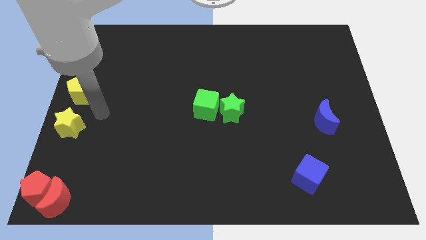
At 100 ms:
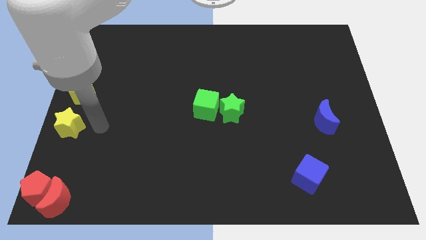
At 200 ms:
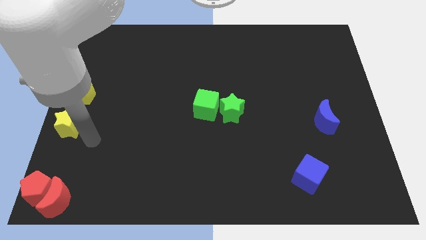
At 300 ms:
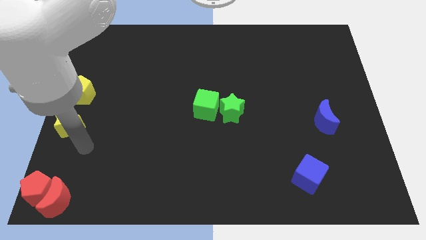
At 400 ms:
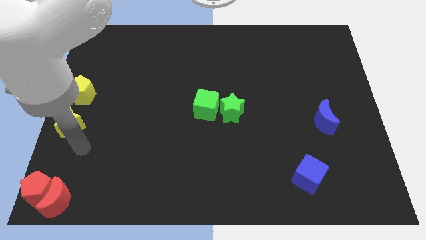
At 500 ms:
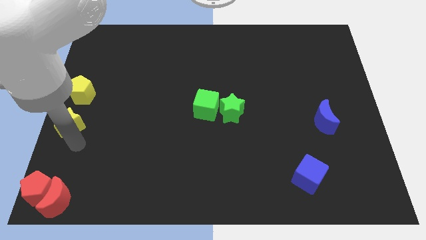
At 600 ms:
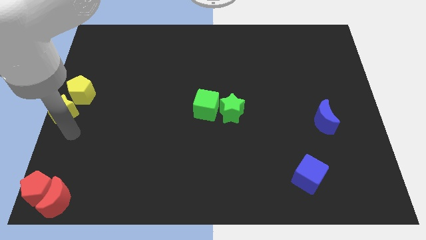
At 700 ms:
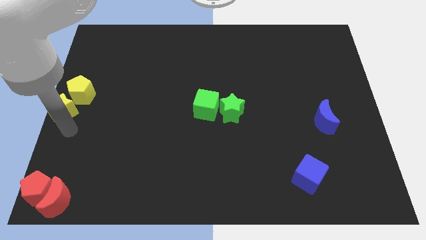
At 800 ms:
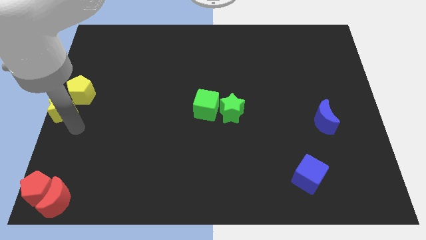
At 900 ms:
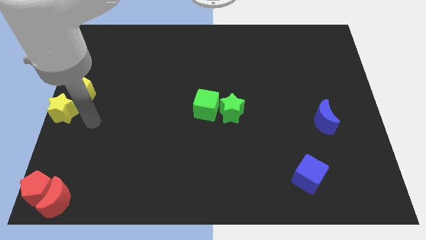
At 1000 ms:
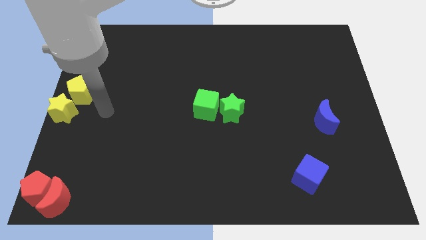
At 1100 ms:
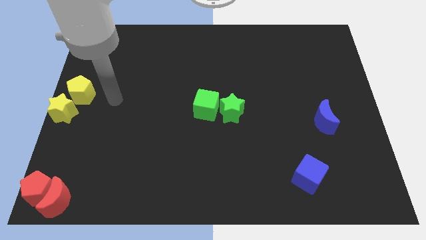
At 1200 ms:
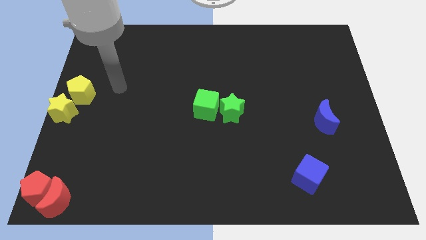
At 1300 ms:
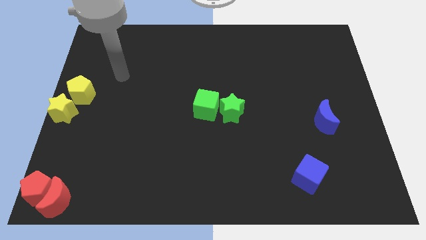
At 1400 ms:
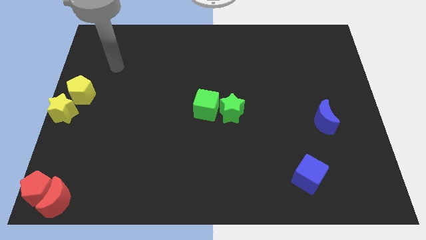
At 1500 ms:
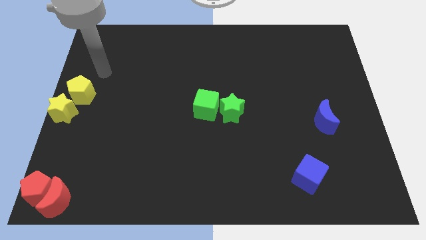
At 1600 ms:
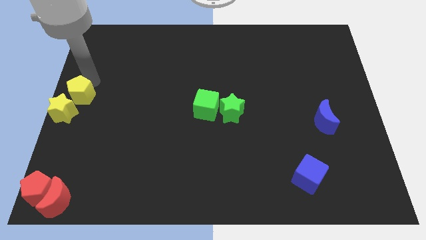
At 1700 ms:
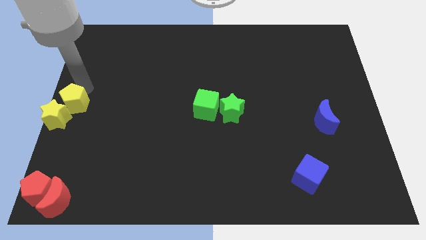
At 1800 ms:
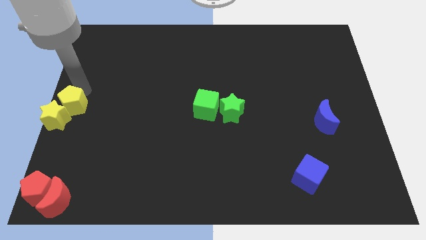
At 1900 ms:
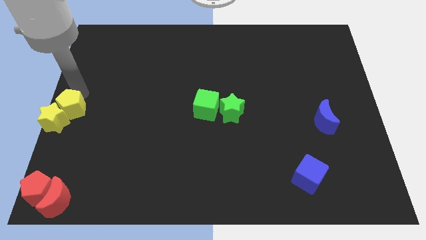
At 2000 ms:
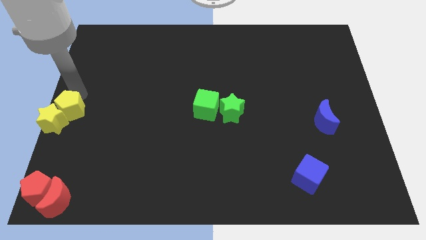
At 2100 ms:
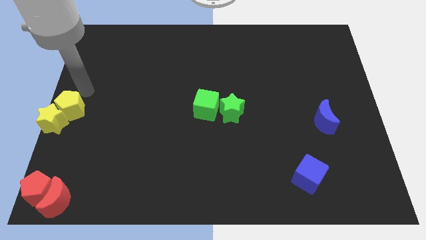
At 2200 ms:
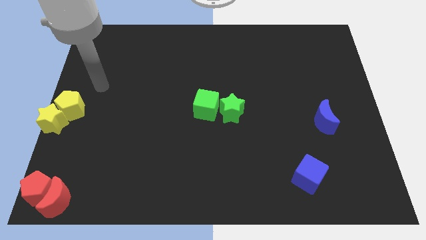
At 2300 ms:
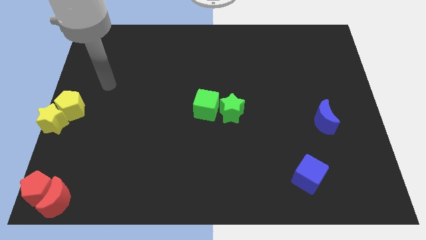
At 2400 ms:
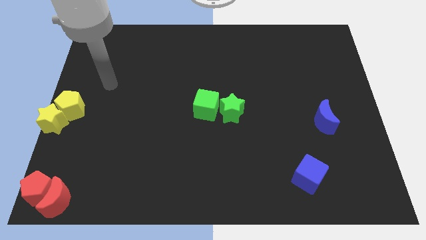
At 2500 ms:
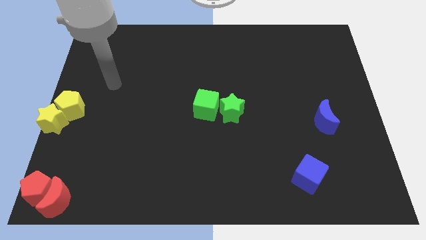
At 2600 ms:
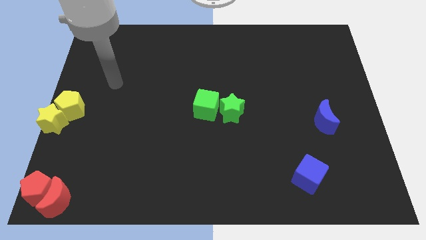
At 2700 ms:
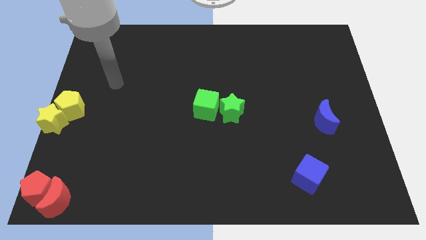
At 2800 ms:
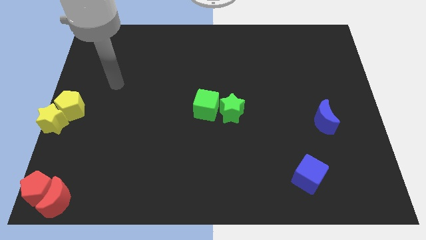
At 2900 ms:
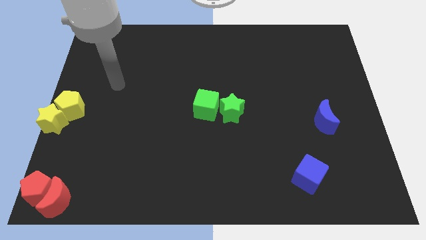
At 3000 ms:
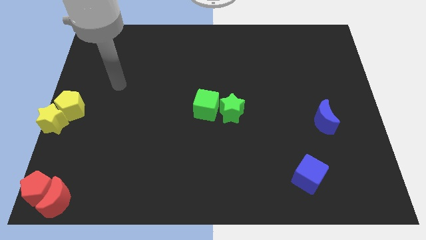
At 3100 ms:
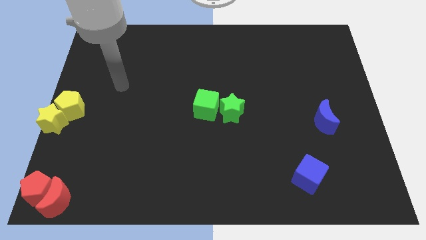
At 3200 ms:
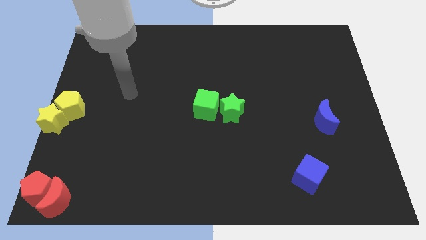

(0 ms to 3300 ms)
push the yellow pentagon into the yellow star

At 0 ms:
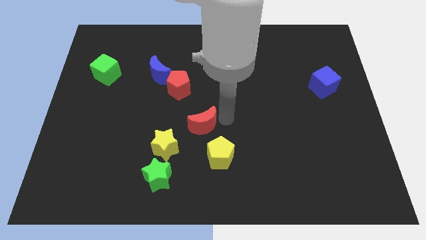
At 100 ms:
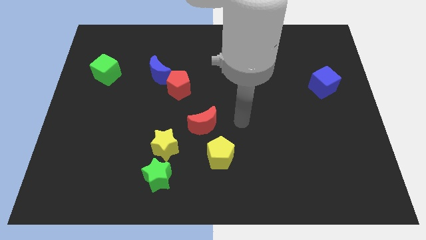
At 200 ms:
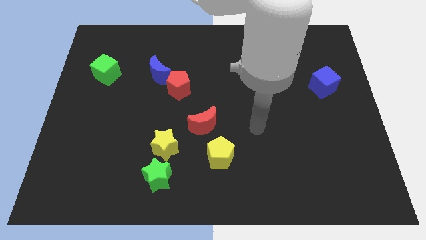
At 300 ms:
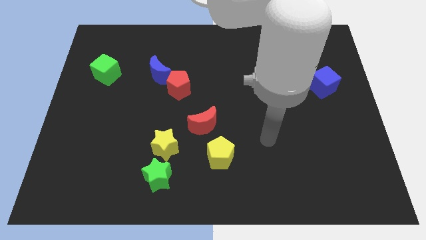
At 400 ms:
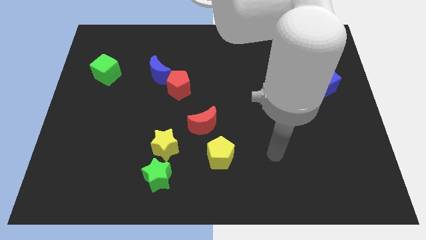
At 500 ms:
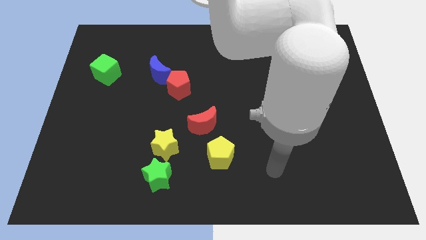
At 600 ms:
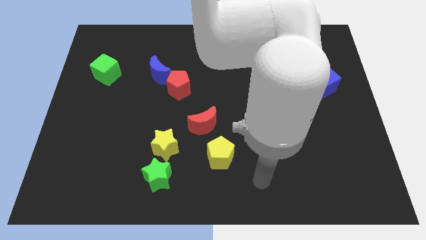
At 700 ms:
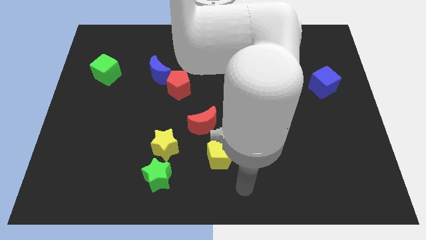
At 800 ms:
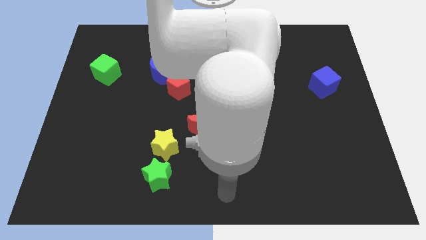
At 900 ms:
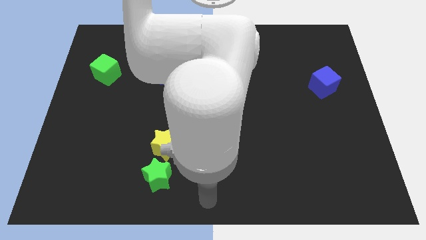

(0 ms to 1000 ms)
move your hand at the bottom side of the yellow pentagon

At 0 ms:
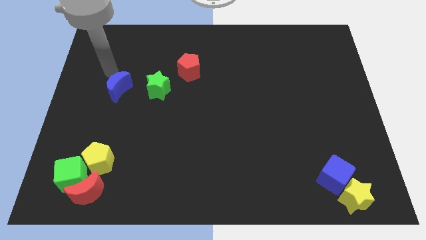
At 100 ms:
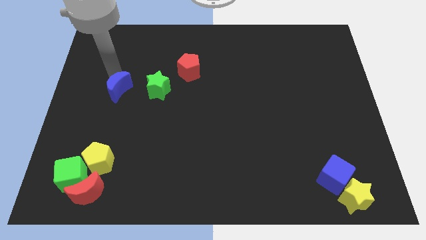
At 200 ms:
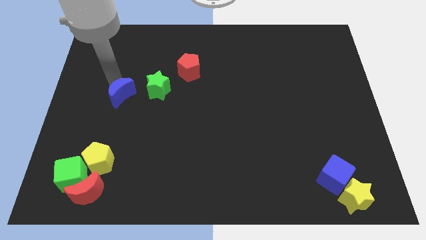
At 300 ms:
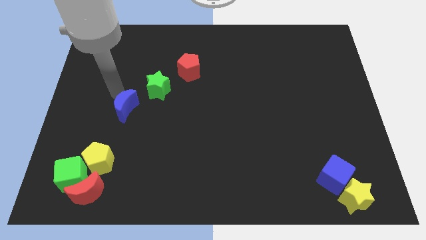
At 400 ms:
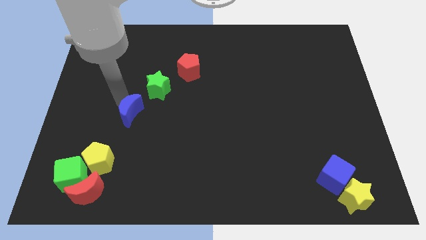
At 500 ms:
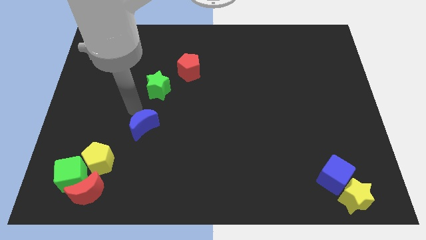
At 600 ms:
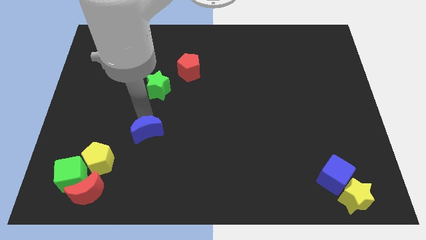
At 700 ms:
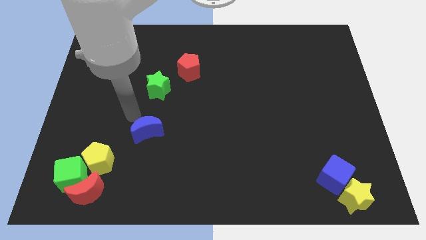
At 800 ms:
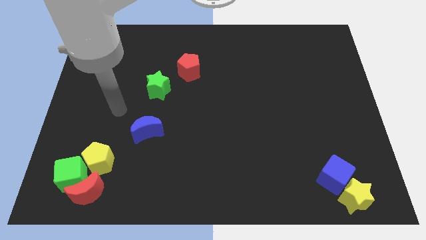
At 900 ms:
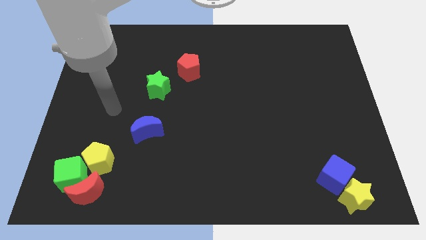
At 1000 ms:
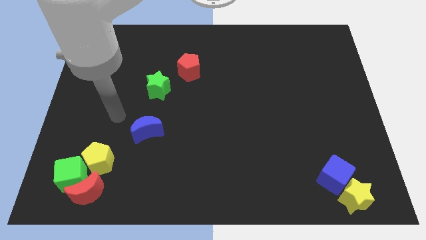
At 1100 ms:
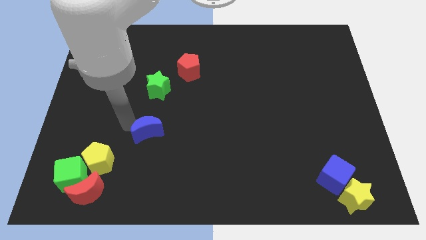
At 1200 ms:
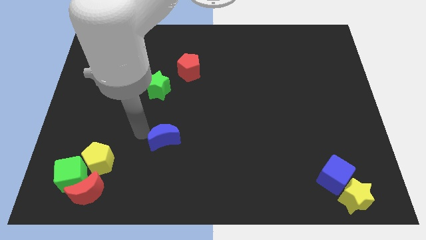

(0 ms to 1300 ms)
put the blue crescent below the green star

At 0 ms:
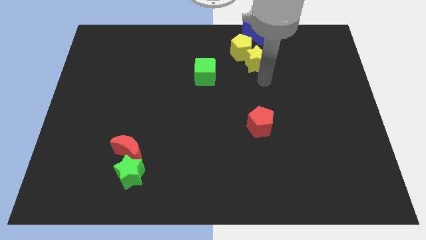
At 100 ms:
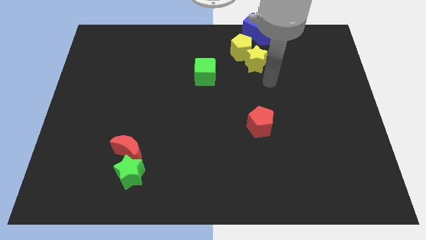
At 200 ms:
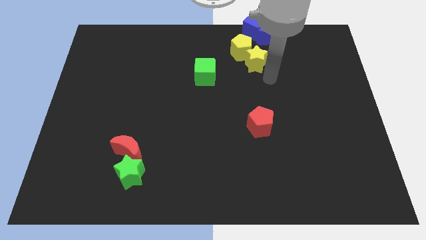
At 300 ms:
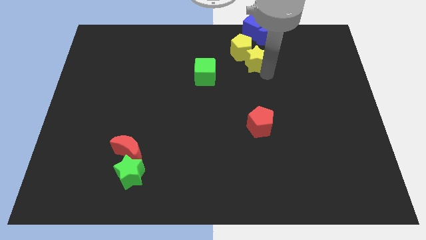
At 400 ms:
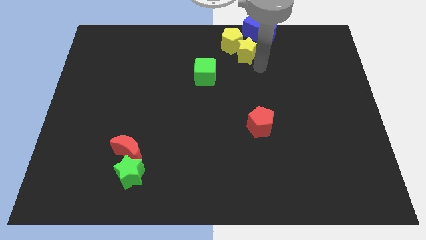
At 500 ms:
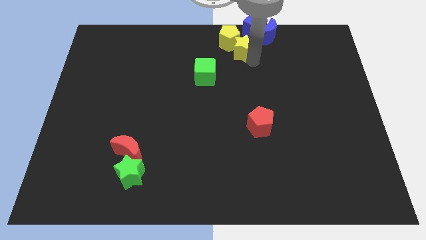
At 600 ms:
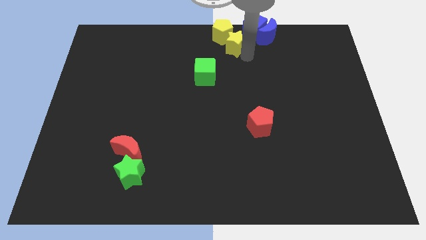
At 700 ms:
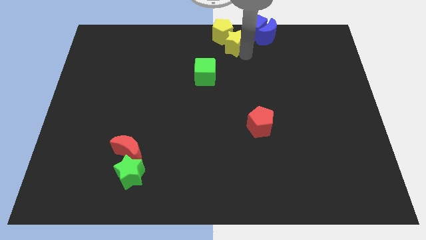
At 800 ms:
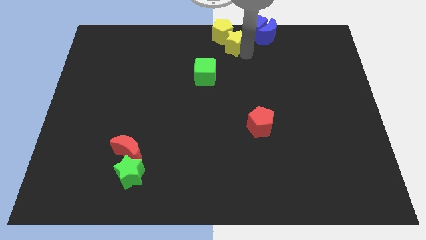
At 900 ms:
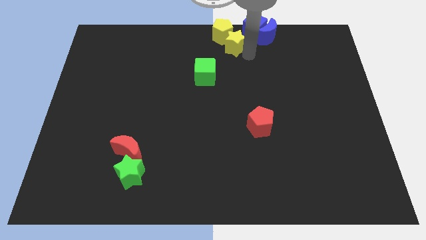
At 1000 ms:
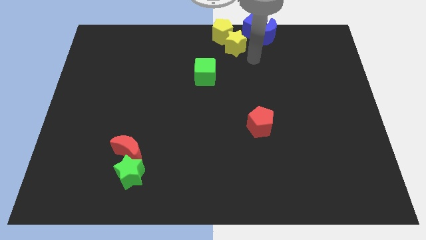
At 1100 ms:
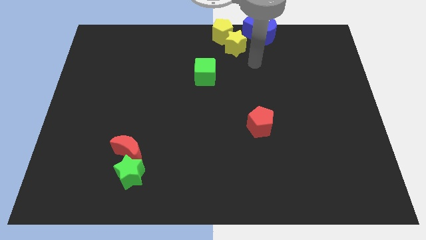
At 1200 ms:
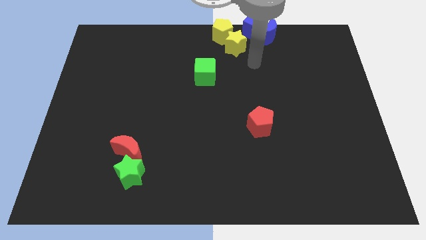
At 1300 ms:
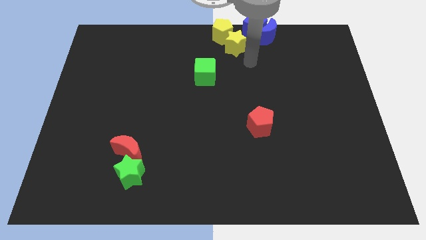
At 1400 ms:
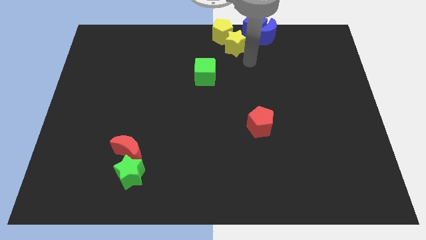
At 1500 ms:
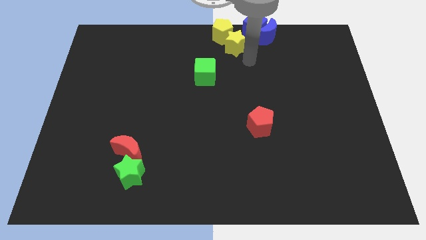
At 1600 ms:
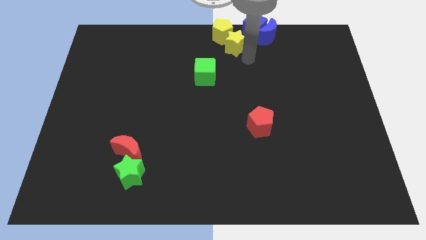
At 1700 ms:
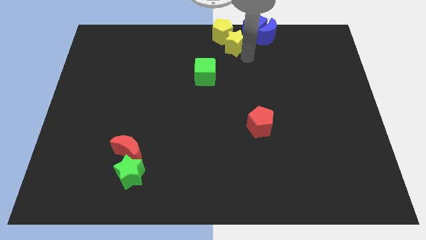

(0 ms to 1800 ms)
push the yellow star into the yellow pentagon

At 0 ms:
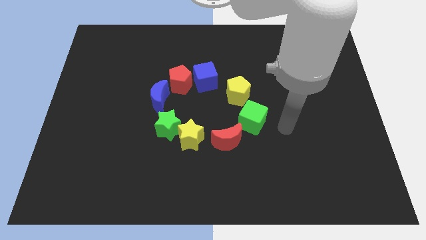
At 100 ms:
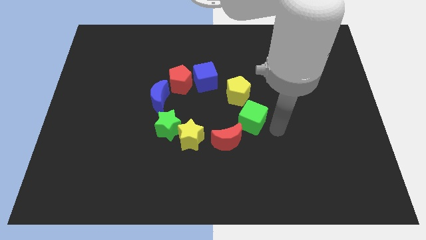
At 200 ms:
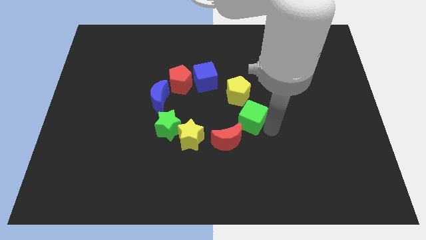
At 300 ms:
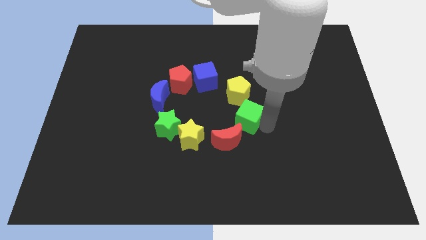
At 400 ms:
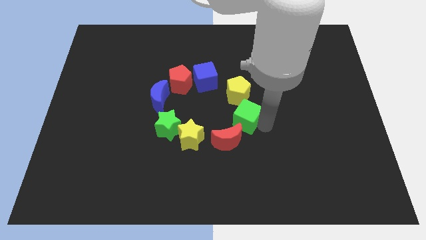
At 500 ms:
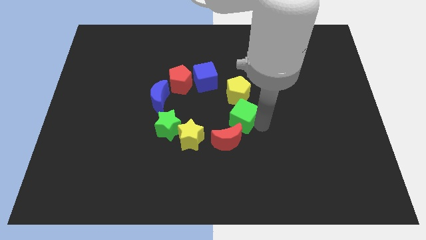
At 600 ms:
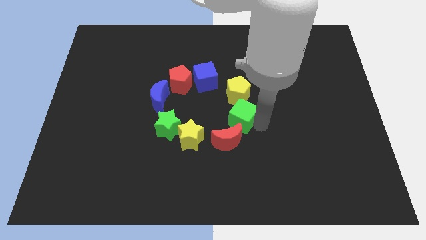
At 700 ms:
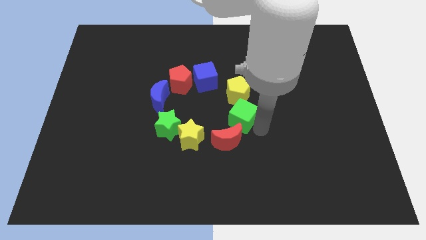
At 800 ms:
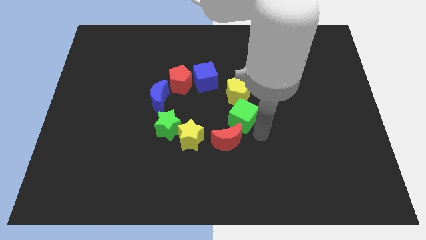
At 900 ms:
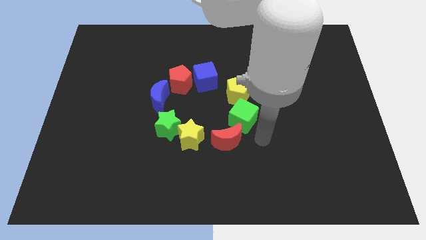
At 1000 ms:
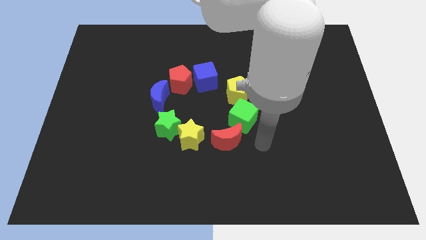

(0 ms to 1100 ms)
move the green cube to the top right of the red crescent

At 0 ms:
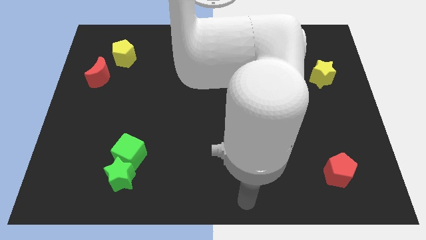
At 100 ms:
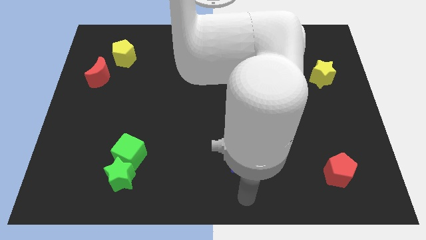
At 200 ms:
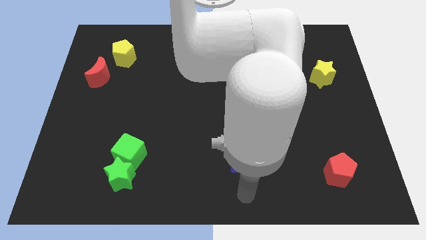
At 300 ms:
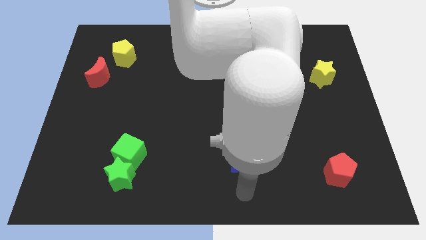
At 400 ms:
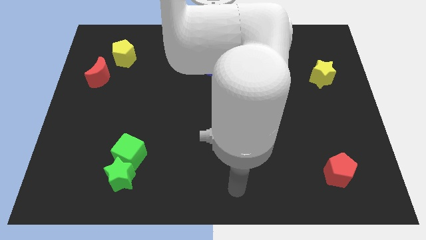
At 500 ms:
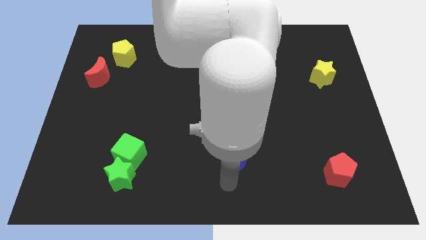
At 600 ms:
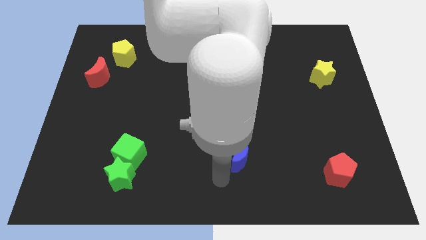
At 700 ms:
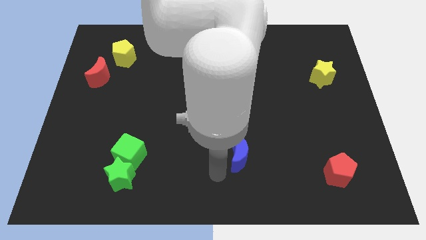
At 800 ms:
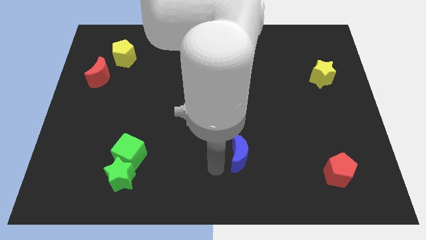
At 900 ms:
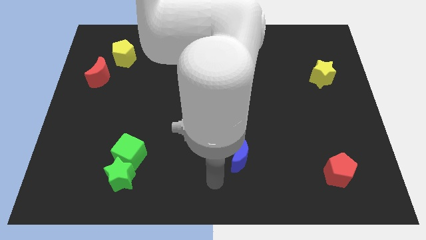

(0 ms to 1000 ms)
point your arm at the bottom left side of blue moon
